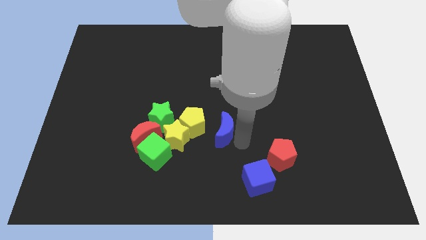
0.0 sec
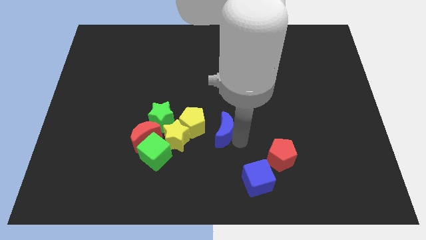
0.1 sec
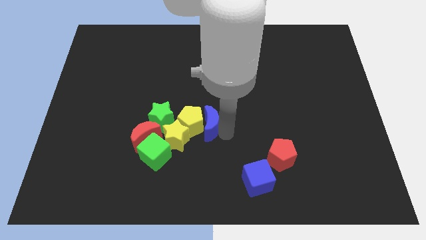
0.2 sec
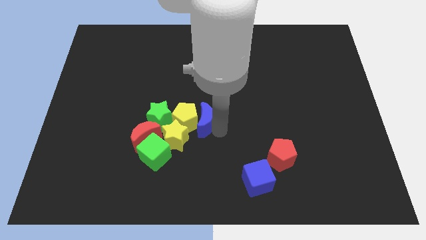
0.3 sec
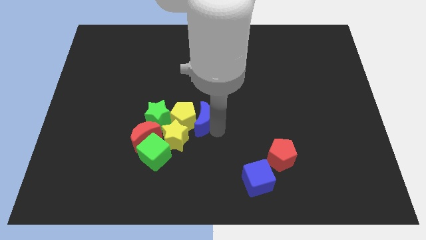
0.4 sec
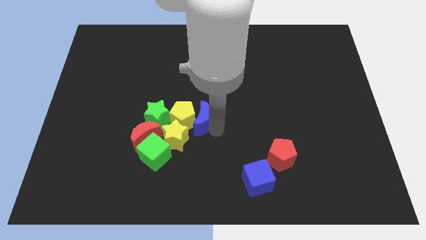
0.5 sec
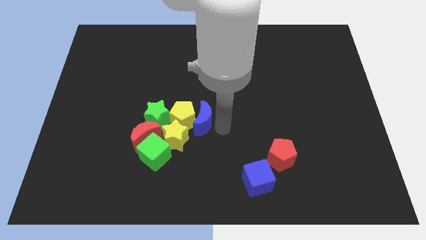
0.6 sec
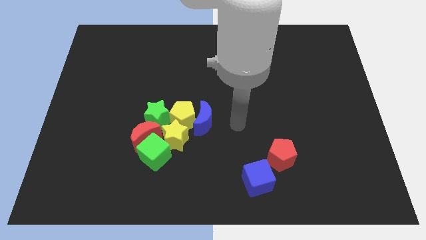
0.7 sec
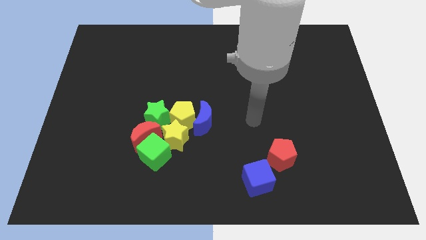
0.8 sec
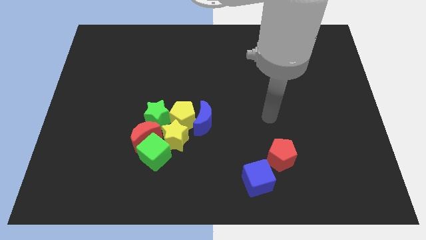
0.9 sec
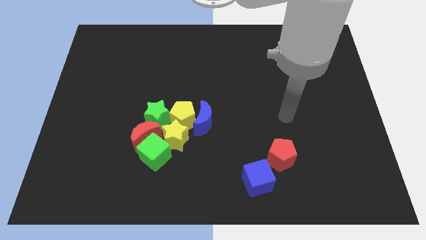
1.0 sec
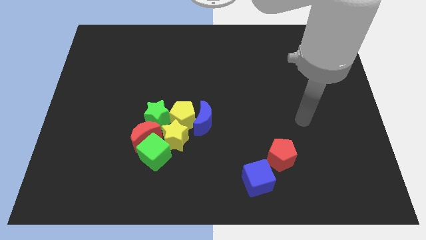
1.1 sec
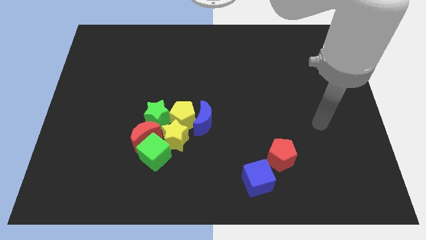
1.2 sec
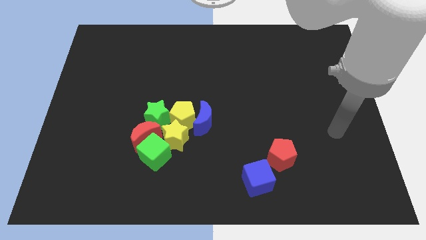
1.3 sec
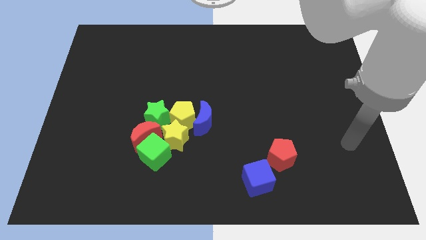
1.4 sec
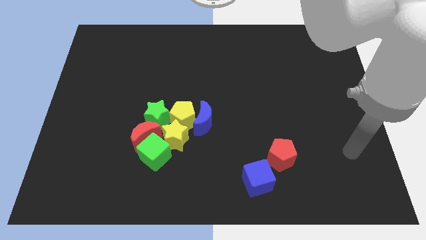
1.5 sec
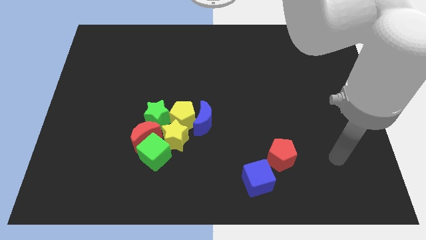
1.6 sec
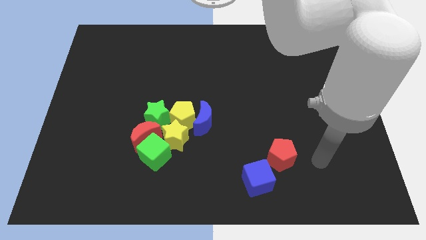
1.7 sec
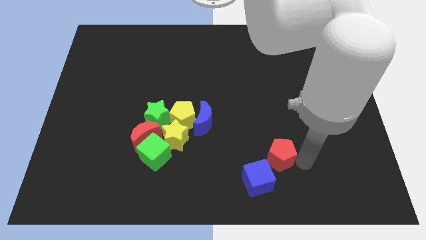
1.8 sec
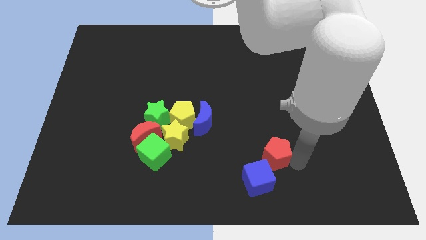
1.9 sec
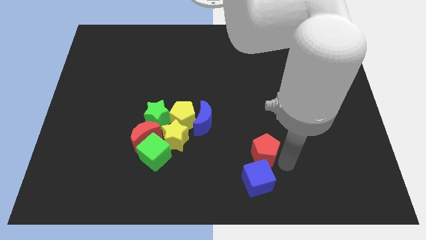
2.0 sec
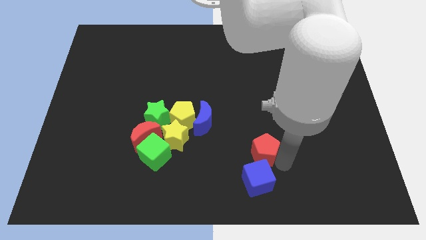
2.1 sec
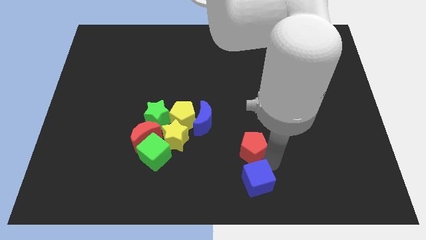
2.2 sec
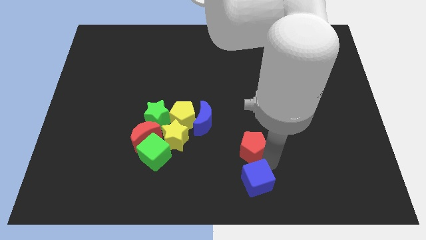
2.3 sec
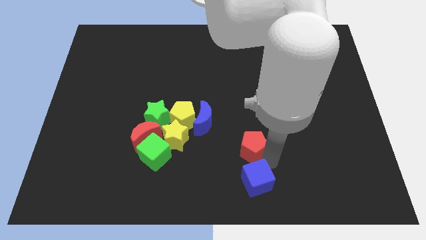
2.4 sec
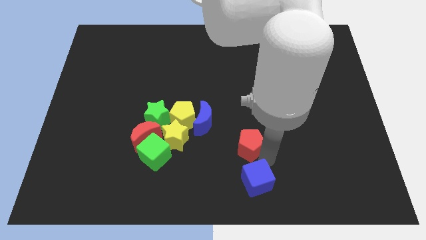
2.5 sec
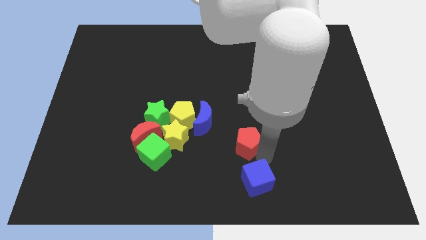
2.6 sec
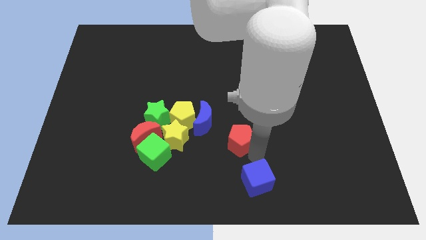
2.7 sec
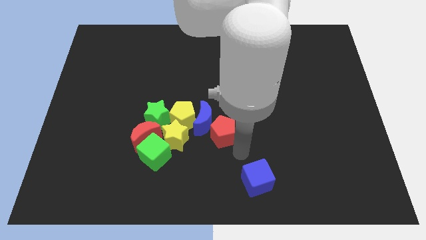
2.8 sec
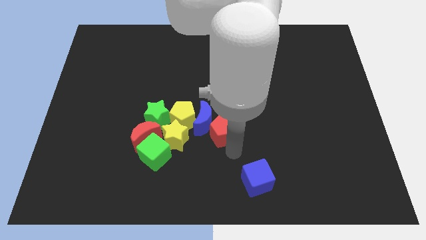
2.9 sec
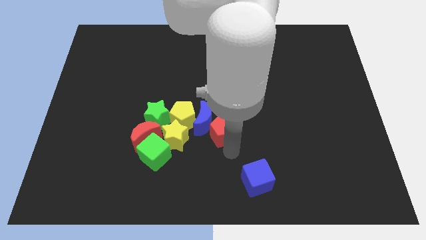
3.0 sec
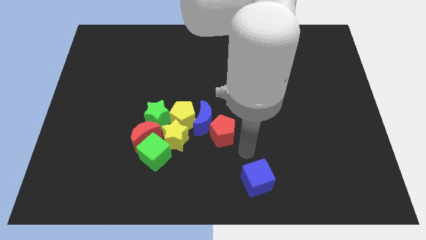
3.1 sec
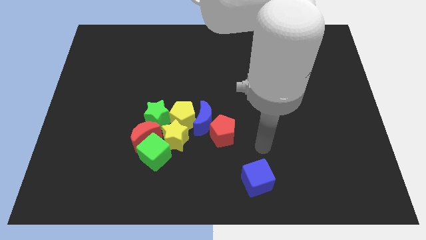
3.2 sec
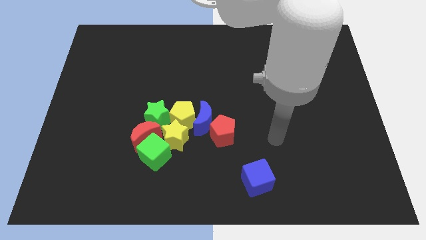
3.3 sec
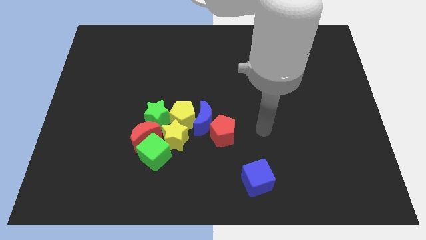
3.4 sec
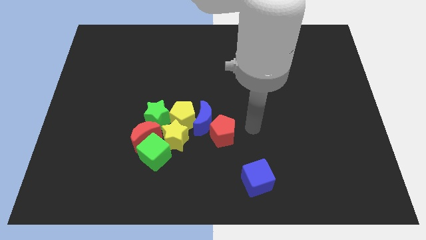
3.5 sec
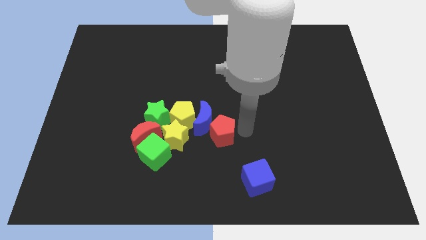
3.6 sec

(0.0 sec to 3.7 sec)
move the red pentagon into the blue moon

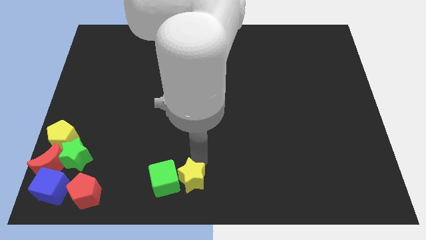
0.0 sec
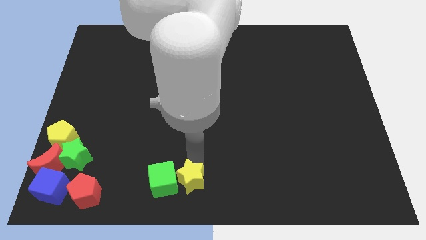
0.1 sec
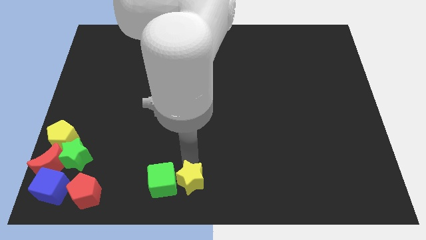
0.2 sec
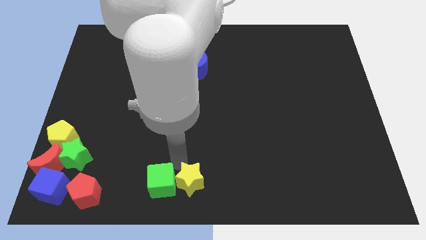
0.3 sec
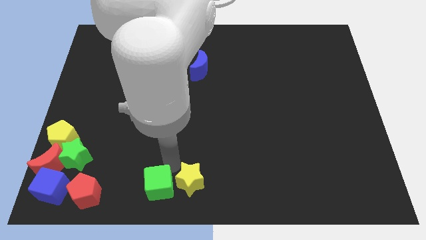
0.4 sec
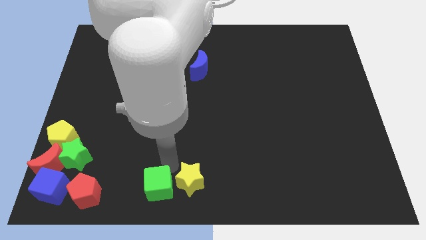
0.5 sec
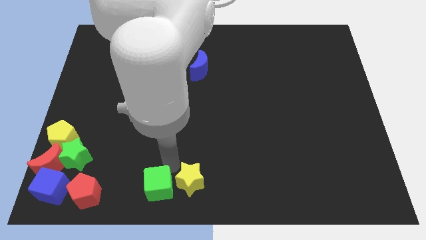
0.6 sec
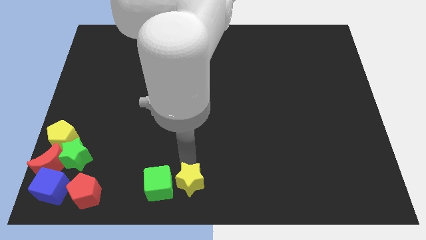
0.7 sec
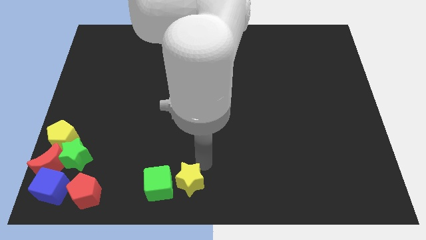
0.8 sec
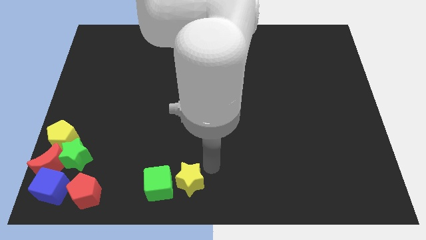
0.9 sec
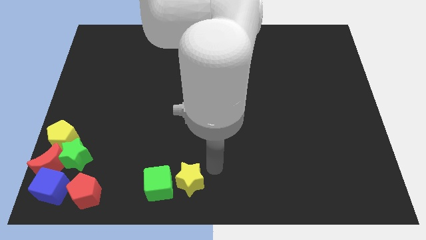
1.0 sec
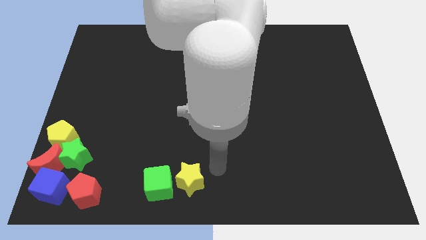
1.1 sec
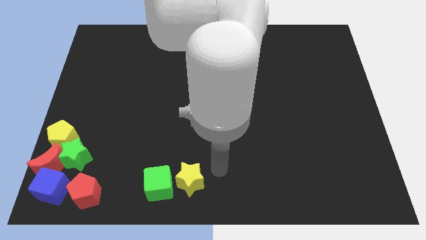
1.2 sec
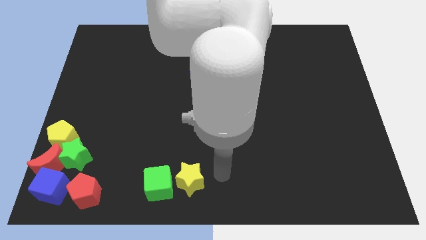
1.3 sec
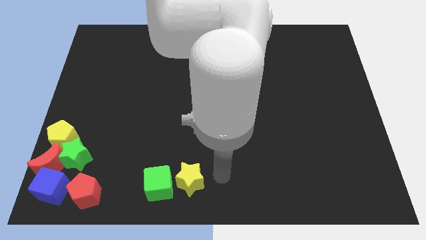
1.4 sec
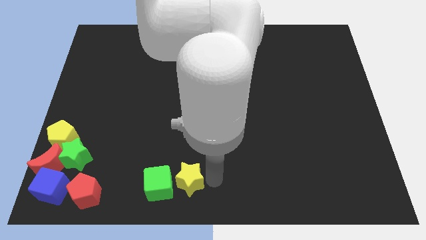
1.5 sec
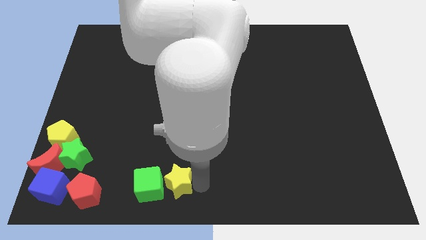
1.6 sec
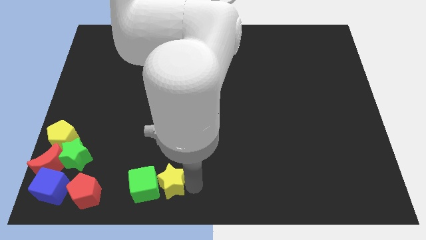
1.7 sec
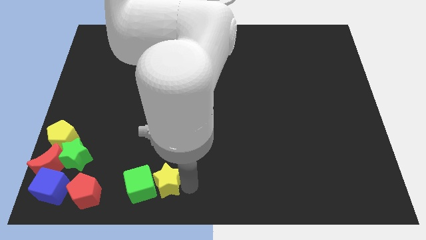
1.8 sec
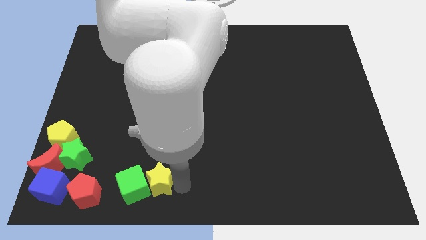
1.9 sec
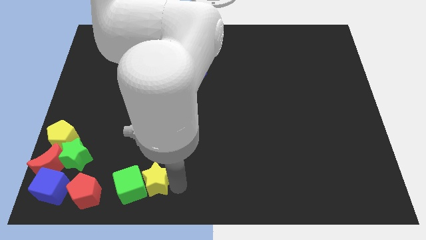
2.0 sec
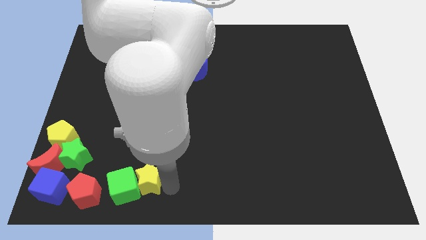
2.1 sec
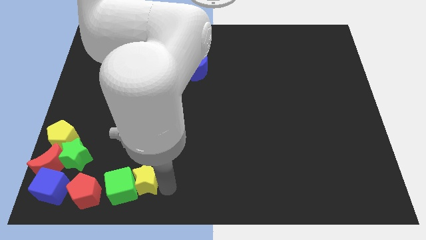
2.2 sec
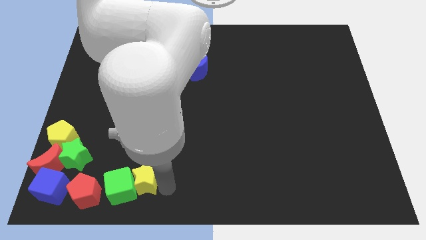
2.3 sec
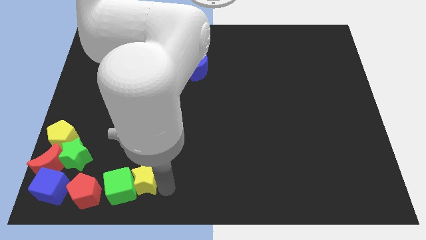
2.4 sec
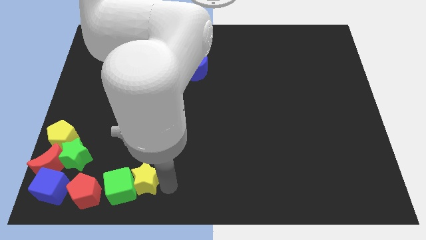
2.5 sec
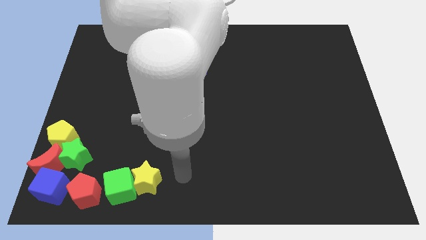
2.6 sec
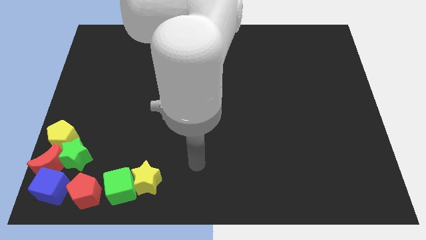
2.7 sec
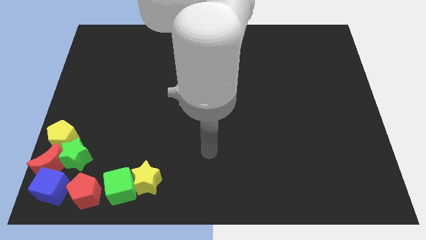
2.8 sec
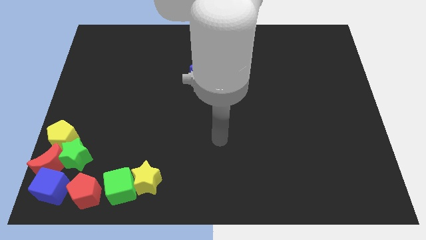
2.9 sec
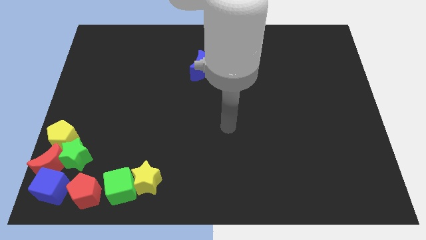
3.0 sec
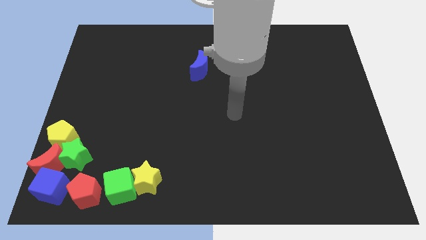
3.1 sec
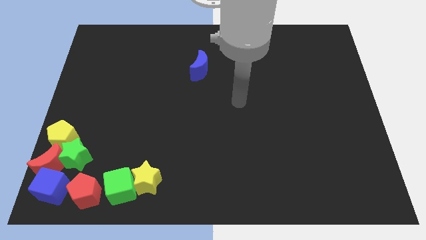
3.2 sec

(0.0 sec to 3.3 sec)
move yellow star along with green cube towards left bottom

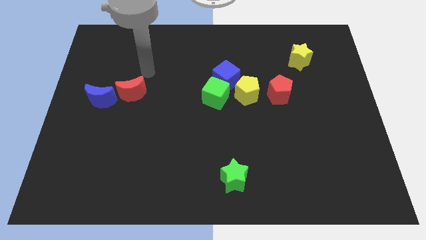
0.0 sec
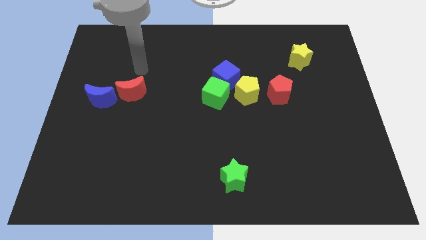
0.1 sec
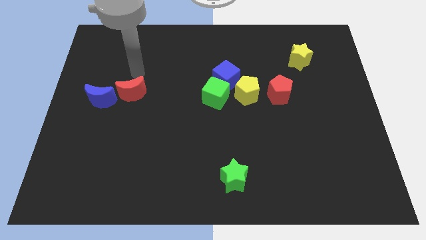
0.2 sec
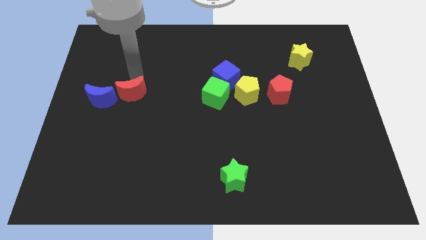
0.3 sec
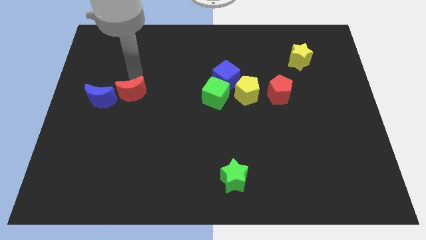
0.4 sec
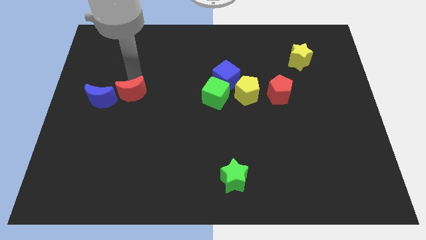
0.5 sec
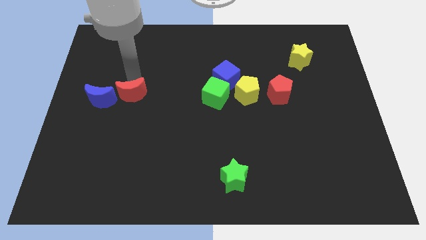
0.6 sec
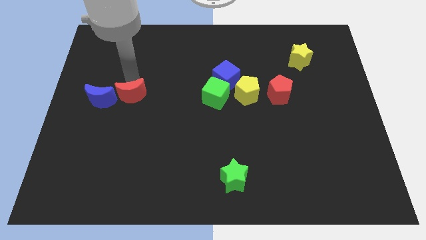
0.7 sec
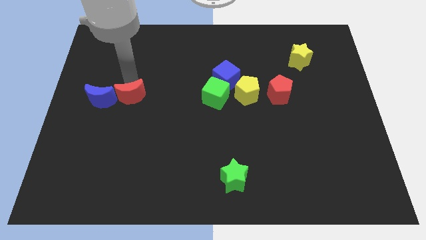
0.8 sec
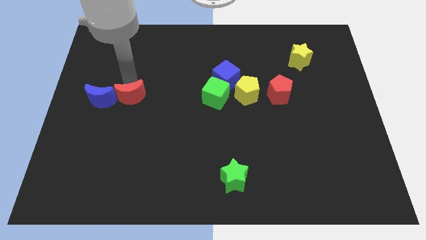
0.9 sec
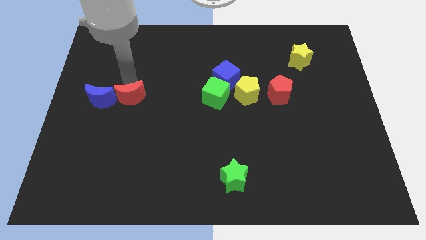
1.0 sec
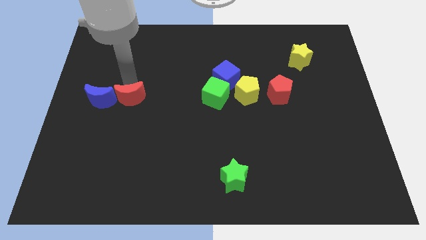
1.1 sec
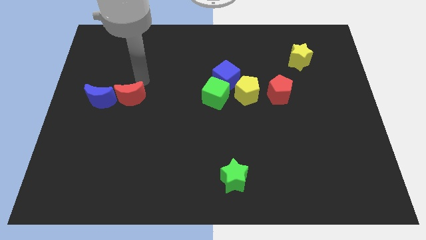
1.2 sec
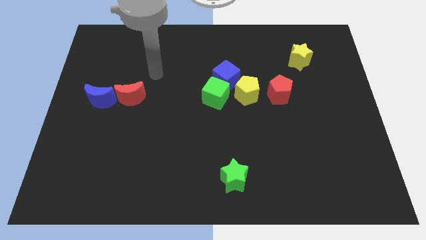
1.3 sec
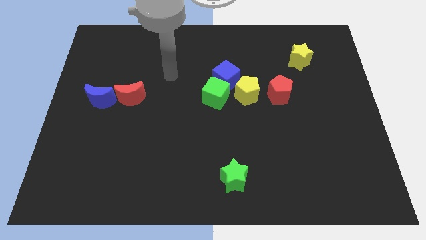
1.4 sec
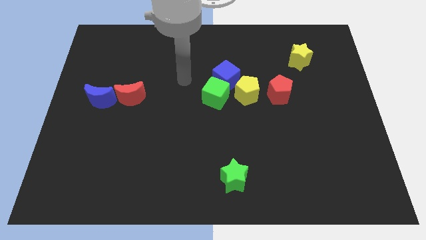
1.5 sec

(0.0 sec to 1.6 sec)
push the red moon into the blue moon

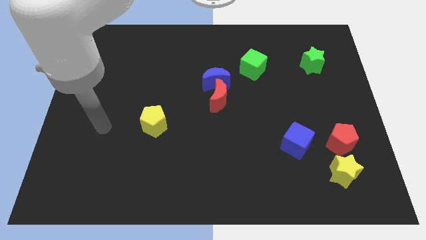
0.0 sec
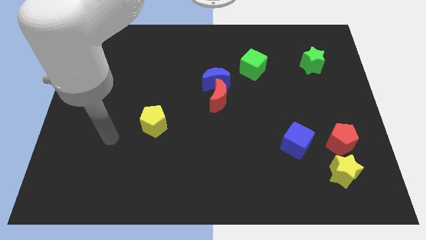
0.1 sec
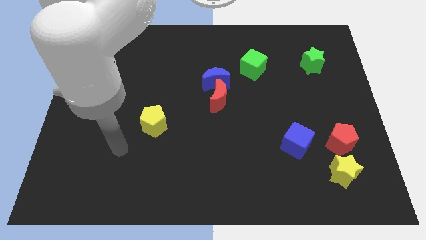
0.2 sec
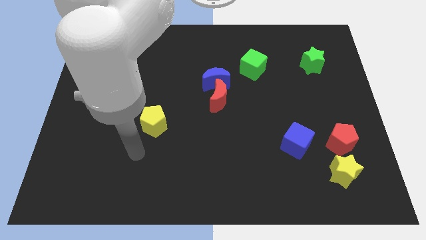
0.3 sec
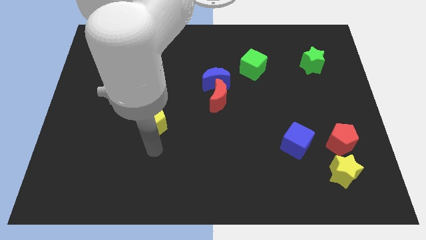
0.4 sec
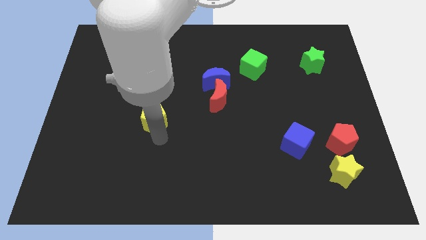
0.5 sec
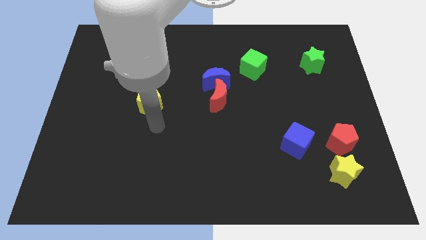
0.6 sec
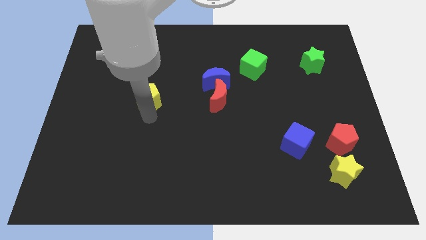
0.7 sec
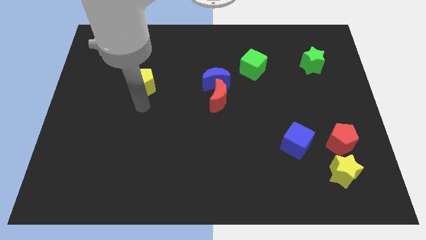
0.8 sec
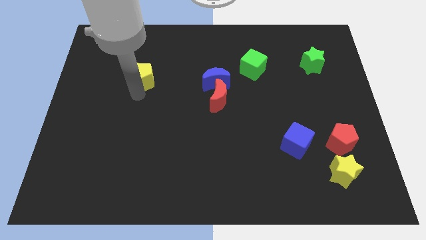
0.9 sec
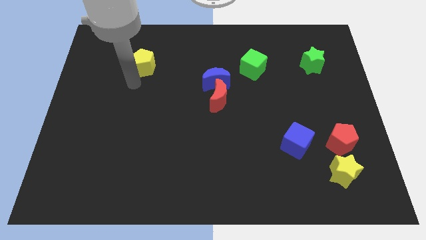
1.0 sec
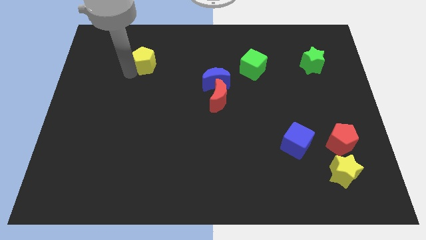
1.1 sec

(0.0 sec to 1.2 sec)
move the yellow pentagon towards the top
